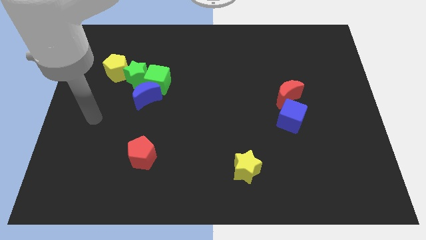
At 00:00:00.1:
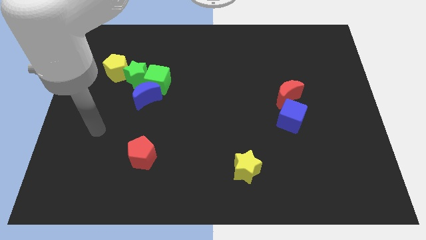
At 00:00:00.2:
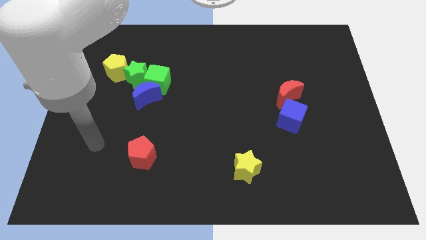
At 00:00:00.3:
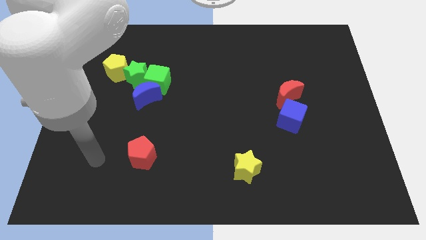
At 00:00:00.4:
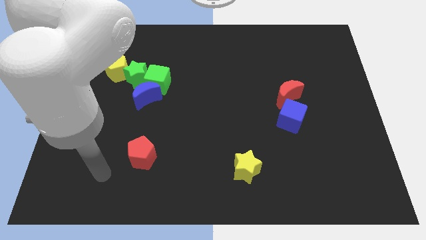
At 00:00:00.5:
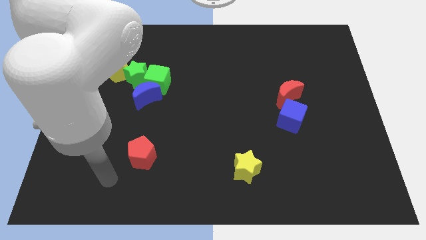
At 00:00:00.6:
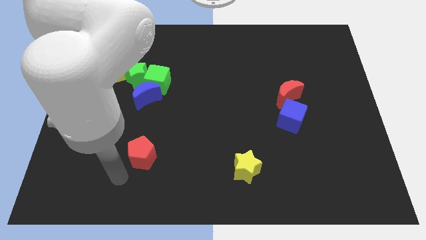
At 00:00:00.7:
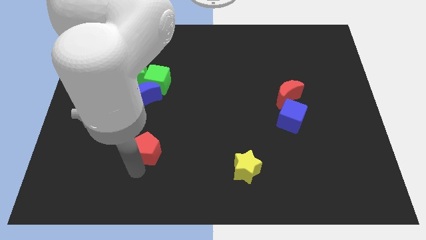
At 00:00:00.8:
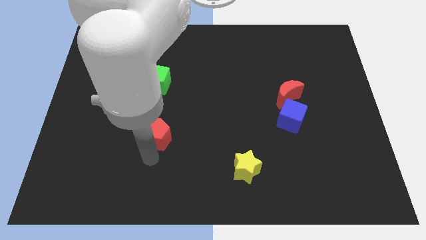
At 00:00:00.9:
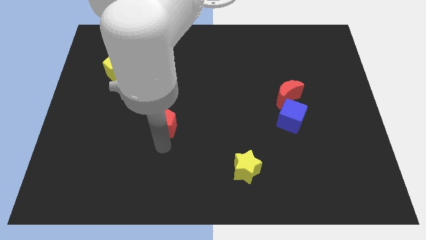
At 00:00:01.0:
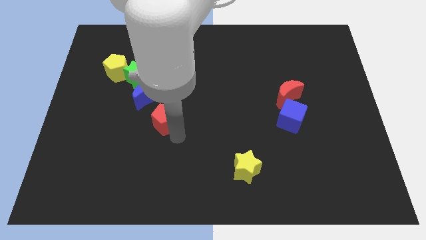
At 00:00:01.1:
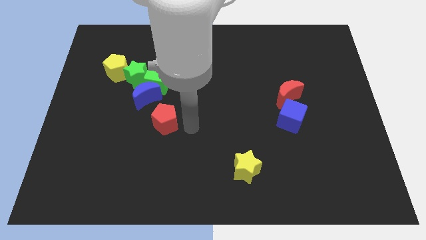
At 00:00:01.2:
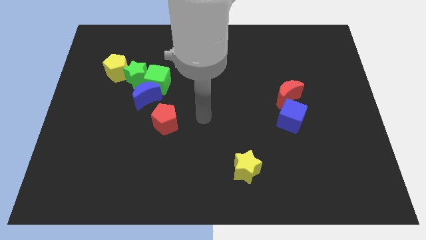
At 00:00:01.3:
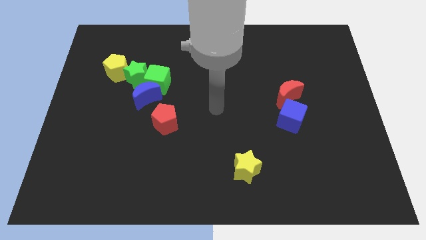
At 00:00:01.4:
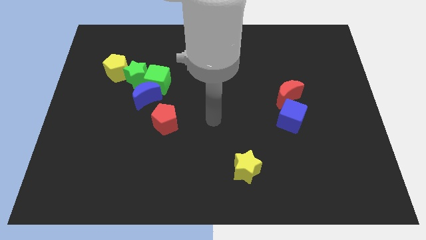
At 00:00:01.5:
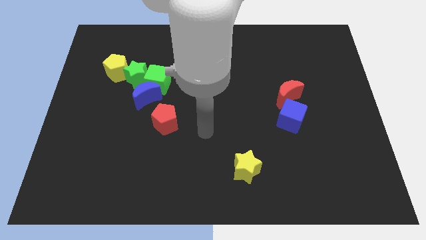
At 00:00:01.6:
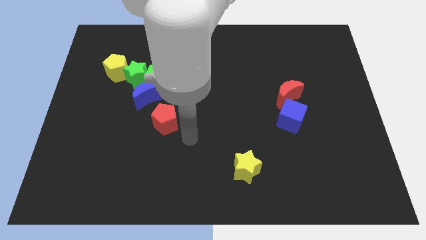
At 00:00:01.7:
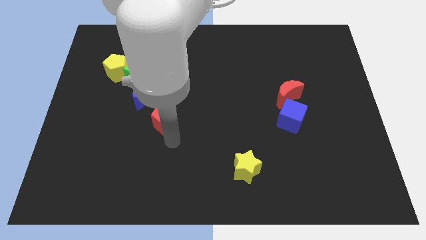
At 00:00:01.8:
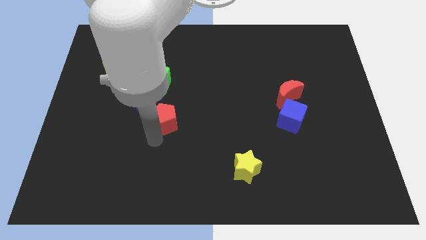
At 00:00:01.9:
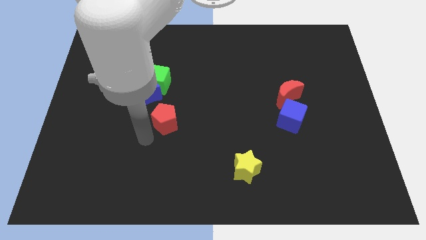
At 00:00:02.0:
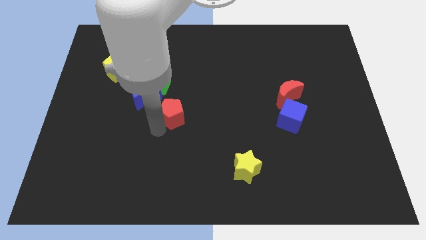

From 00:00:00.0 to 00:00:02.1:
place the red pentagon in between the blue moon and yellow star

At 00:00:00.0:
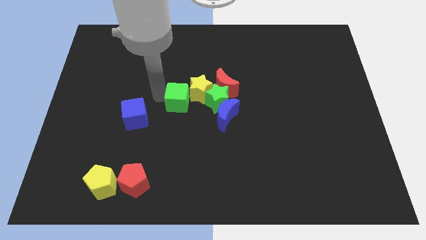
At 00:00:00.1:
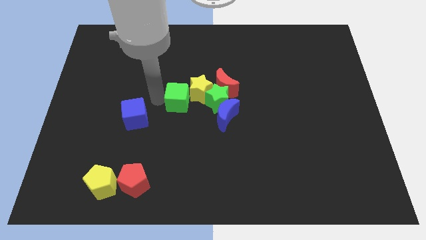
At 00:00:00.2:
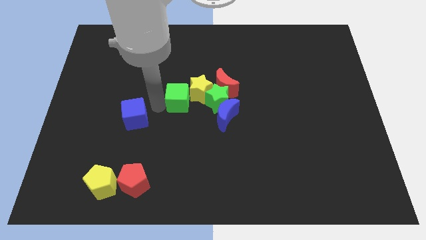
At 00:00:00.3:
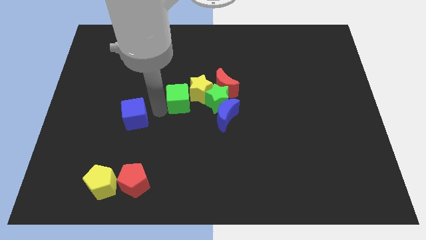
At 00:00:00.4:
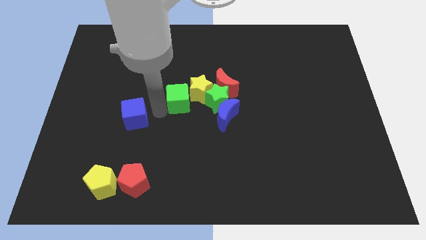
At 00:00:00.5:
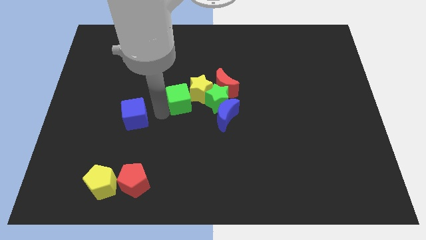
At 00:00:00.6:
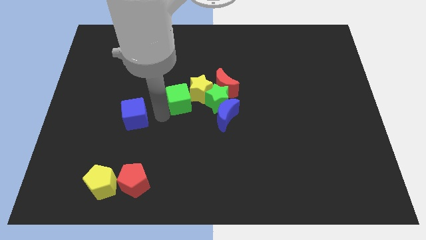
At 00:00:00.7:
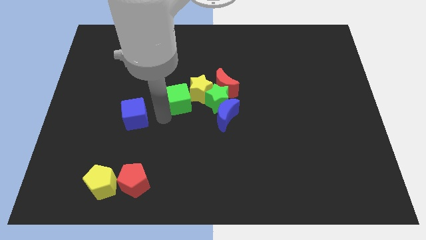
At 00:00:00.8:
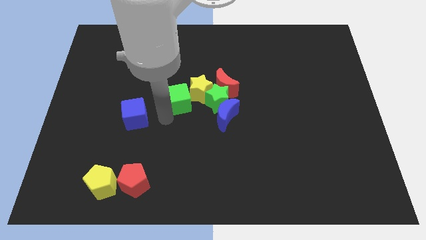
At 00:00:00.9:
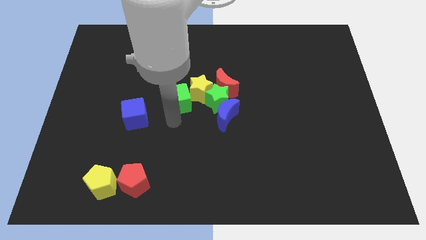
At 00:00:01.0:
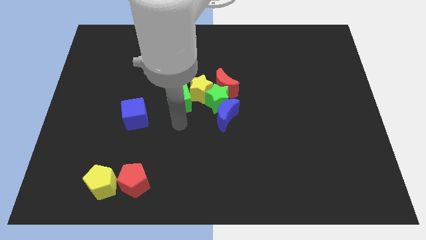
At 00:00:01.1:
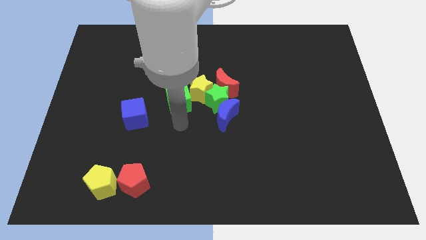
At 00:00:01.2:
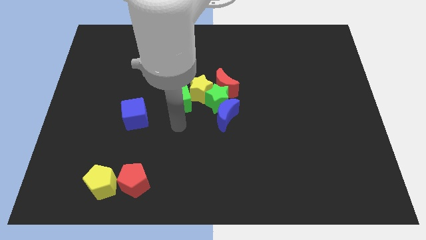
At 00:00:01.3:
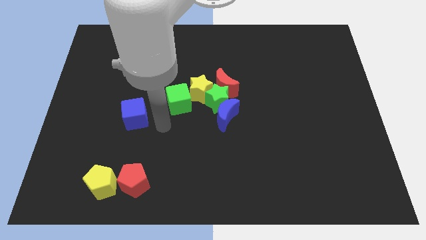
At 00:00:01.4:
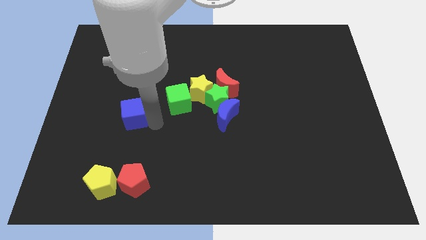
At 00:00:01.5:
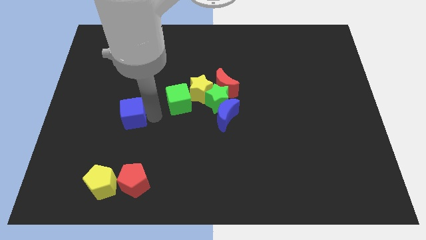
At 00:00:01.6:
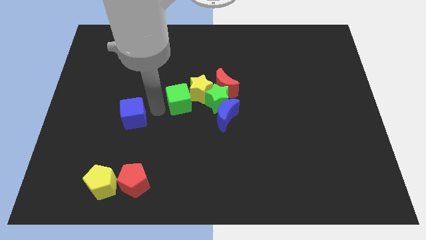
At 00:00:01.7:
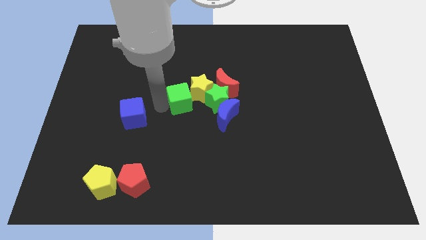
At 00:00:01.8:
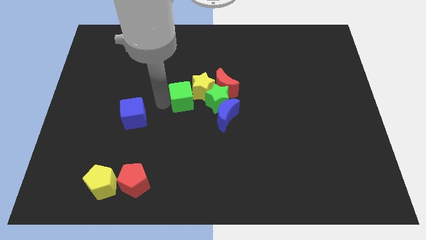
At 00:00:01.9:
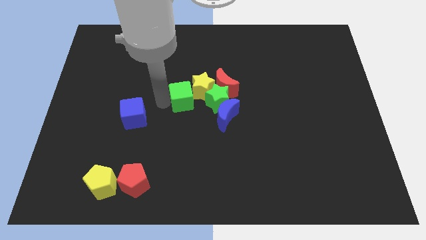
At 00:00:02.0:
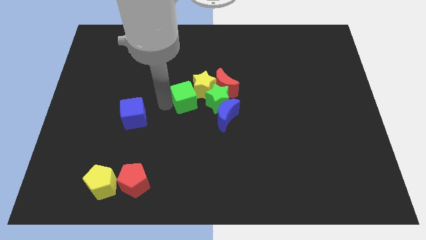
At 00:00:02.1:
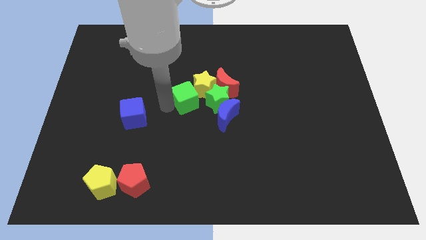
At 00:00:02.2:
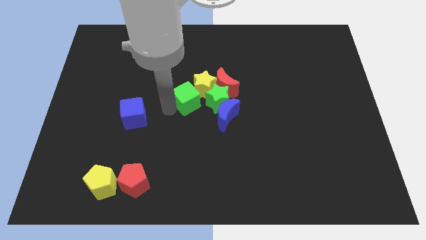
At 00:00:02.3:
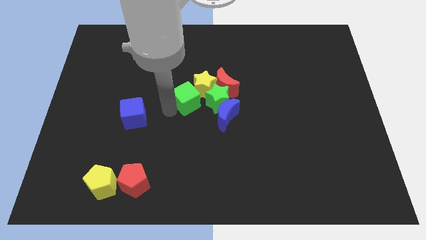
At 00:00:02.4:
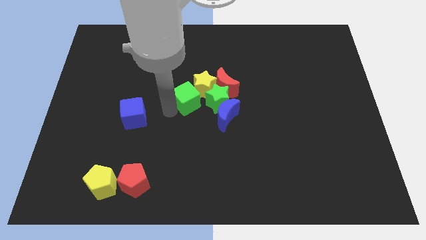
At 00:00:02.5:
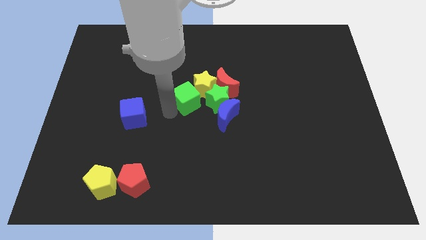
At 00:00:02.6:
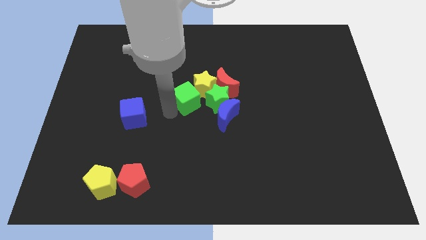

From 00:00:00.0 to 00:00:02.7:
place the green cube below the yellow star

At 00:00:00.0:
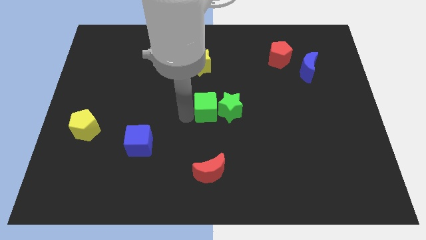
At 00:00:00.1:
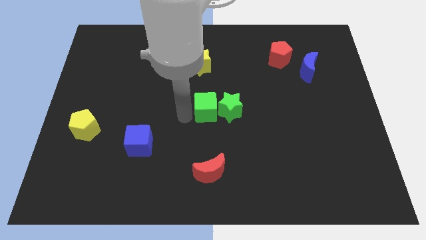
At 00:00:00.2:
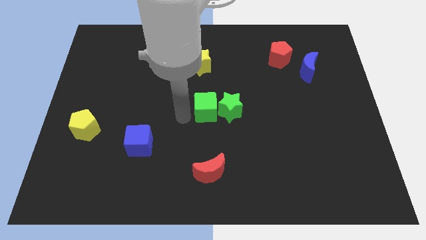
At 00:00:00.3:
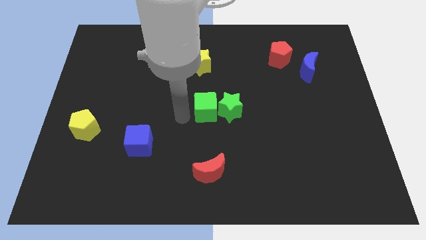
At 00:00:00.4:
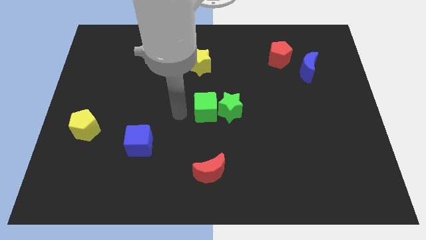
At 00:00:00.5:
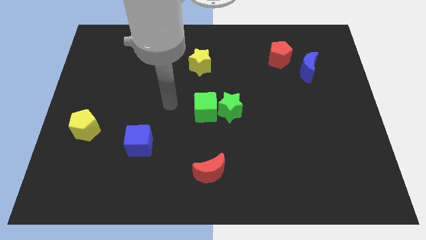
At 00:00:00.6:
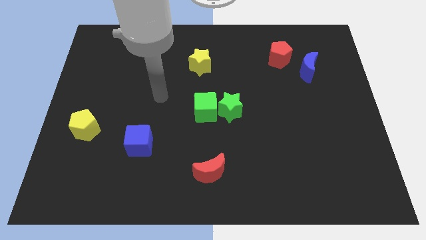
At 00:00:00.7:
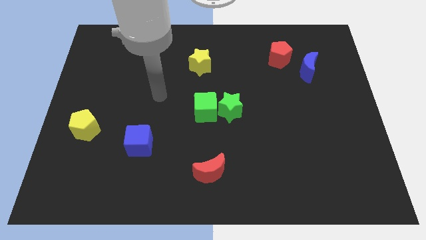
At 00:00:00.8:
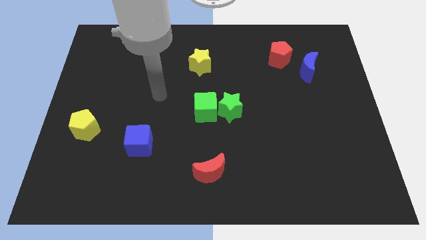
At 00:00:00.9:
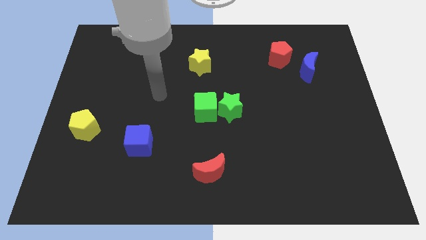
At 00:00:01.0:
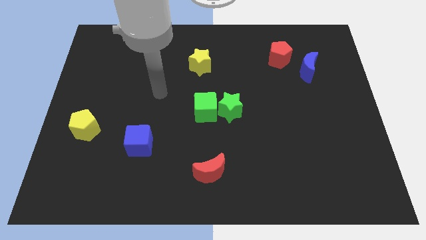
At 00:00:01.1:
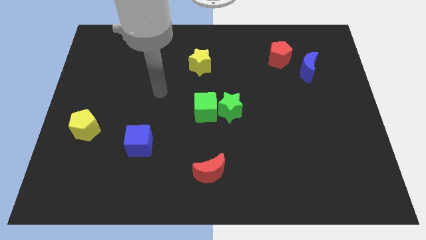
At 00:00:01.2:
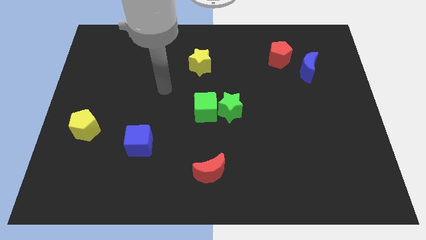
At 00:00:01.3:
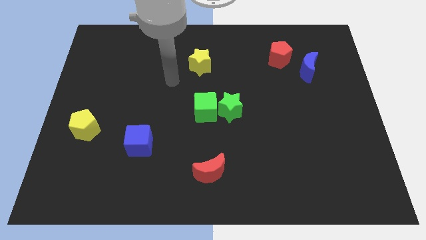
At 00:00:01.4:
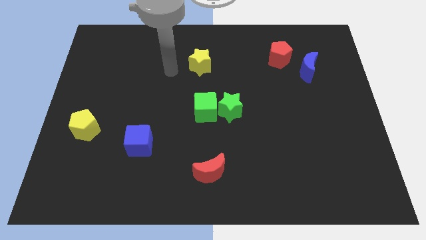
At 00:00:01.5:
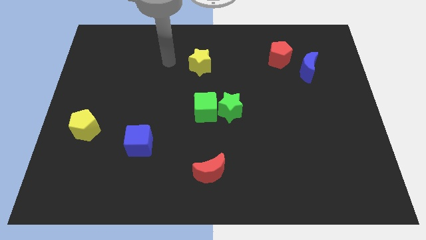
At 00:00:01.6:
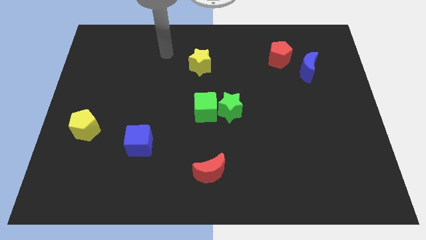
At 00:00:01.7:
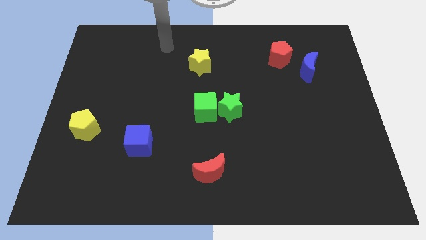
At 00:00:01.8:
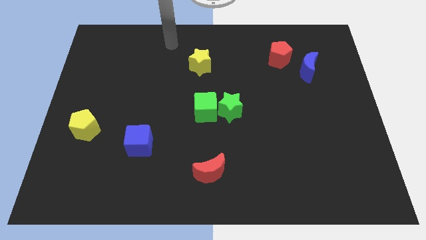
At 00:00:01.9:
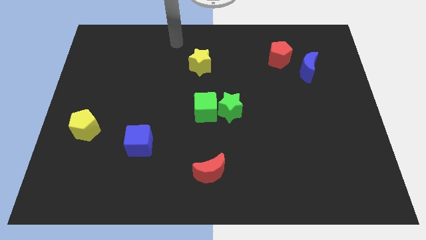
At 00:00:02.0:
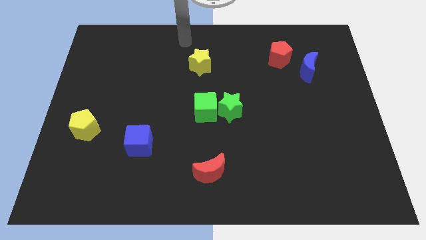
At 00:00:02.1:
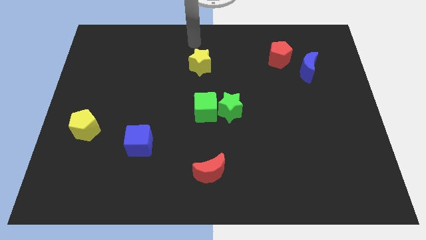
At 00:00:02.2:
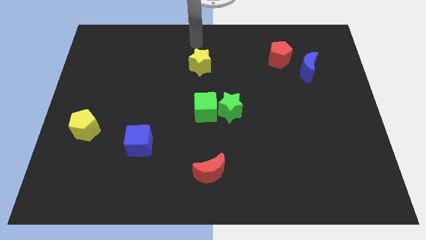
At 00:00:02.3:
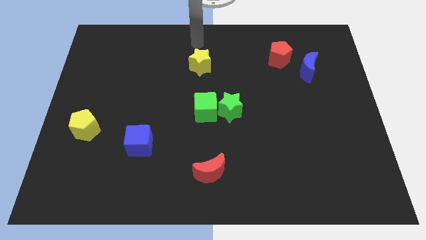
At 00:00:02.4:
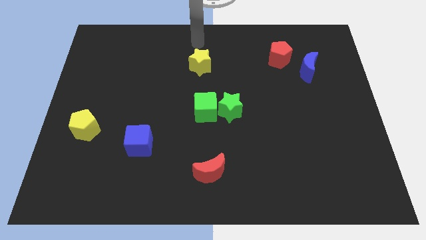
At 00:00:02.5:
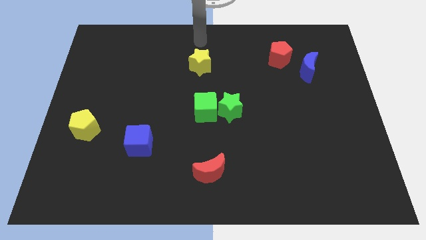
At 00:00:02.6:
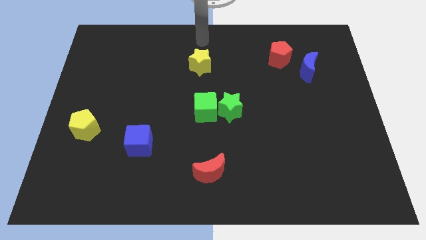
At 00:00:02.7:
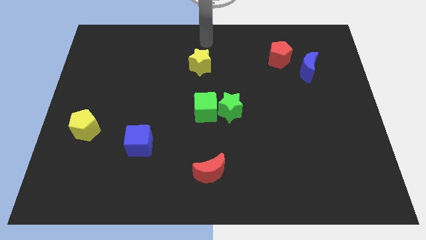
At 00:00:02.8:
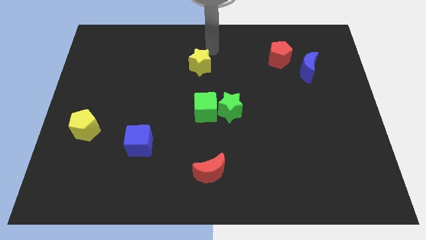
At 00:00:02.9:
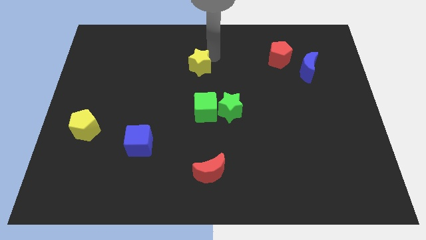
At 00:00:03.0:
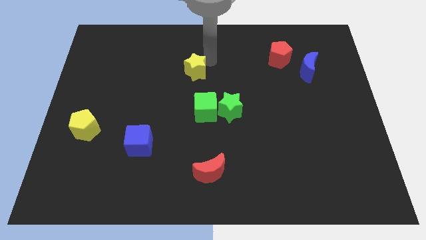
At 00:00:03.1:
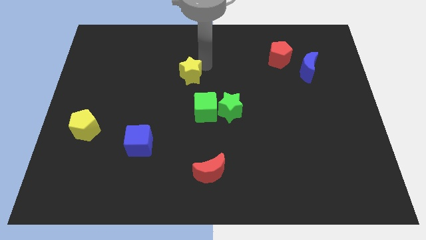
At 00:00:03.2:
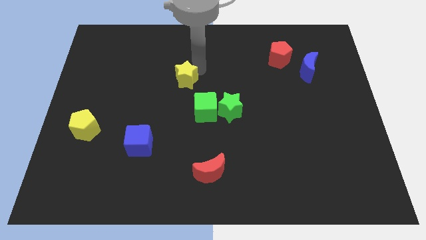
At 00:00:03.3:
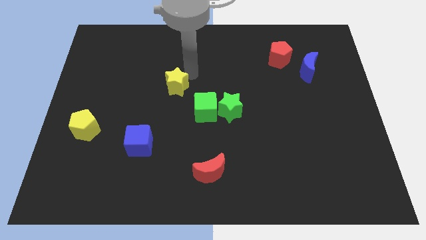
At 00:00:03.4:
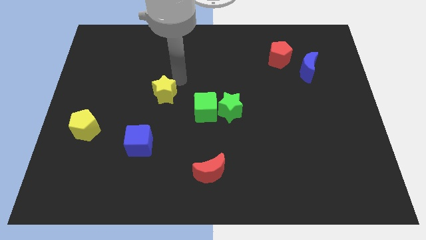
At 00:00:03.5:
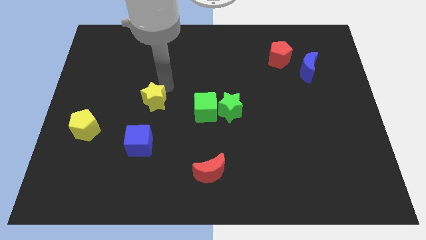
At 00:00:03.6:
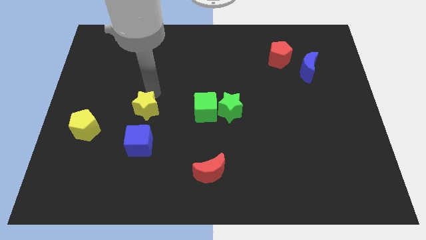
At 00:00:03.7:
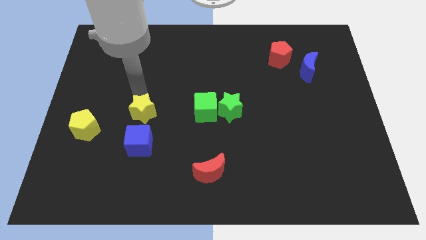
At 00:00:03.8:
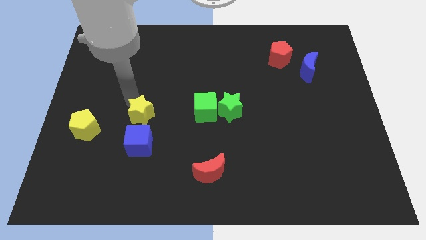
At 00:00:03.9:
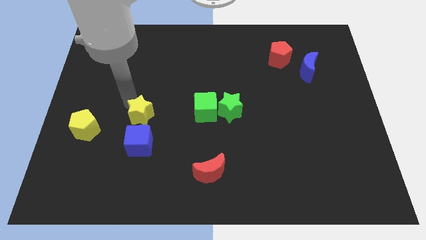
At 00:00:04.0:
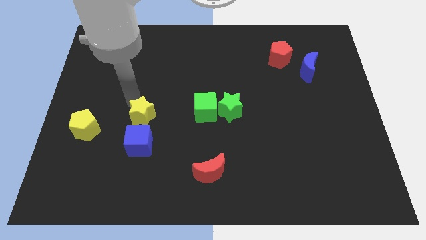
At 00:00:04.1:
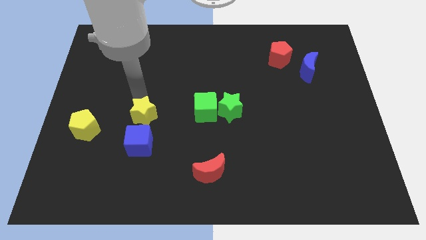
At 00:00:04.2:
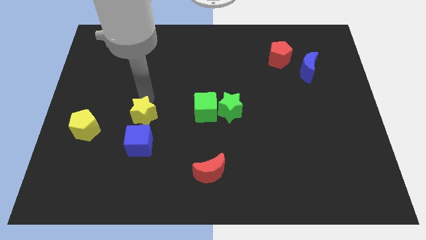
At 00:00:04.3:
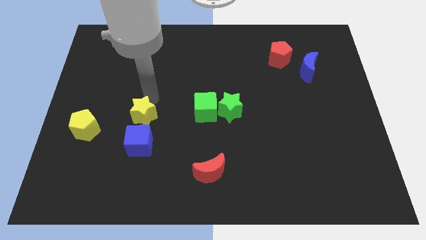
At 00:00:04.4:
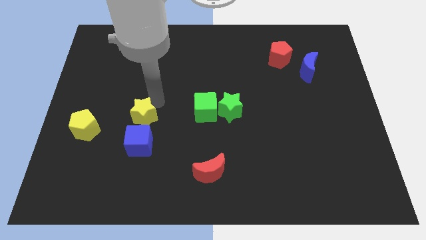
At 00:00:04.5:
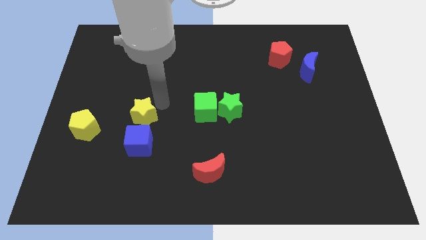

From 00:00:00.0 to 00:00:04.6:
move teh yellow star to the top side of the blue cube
